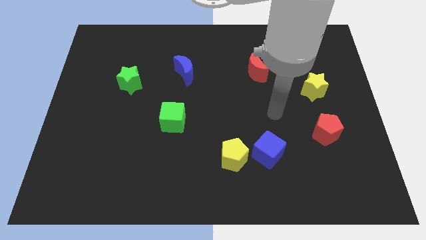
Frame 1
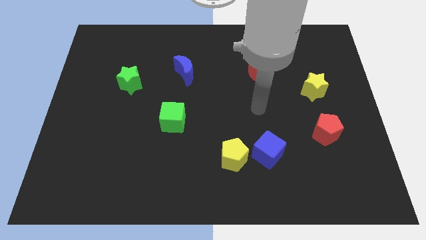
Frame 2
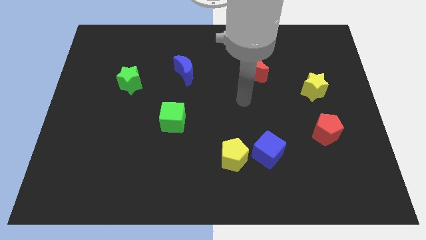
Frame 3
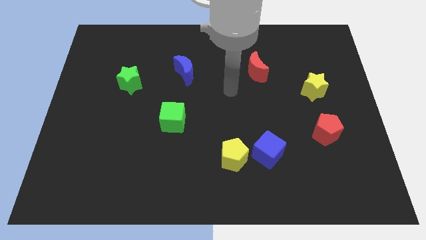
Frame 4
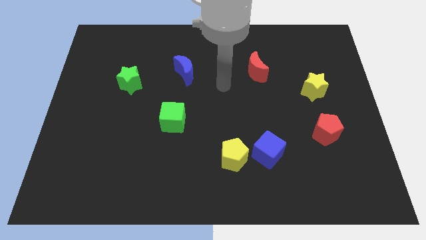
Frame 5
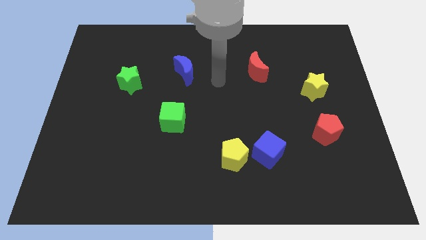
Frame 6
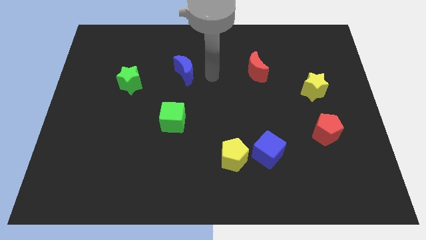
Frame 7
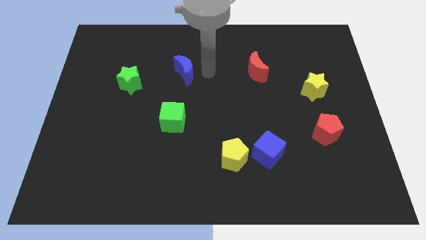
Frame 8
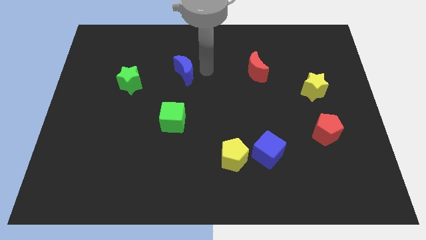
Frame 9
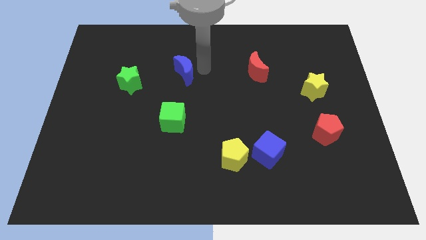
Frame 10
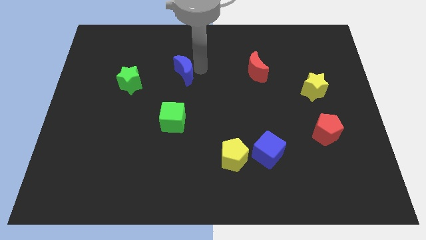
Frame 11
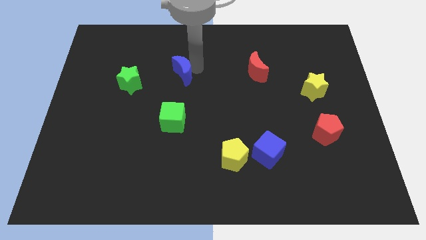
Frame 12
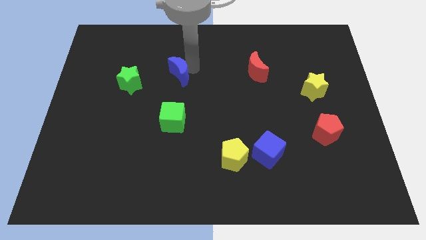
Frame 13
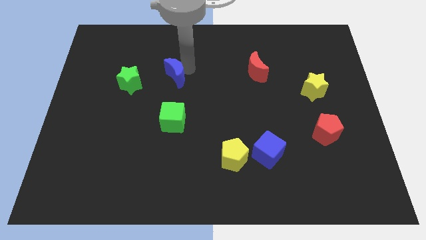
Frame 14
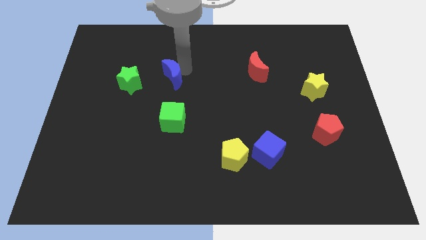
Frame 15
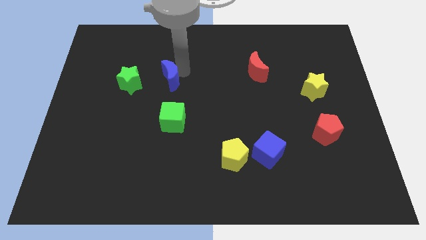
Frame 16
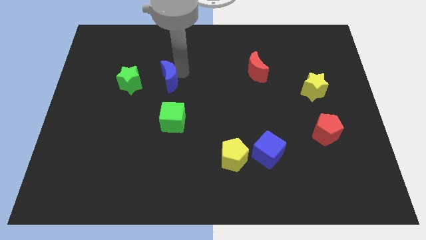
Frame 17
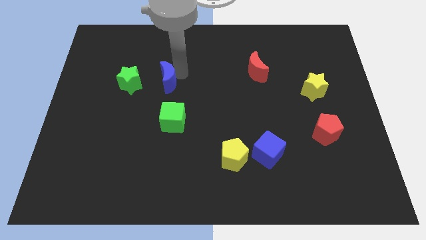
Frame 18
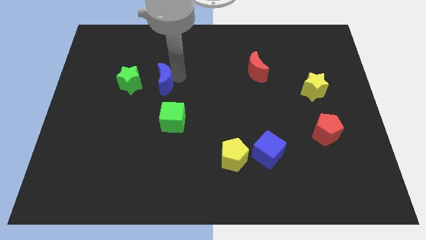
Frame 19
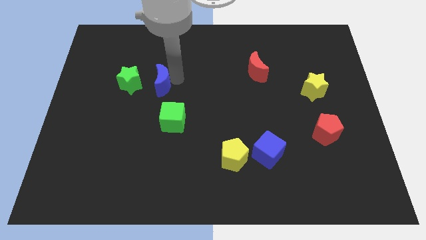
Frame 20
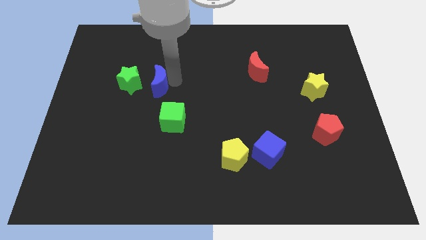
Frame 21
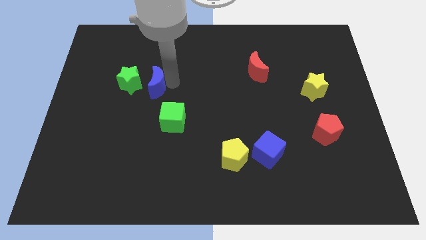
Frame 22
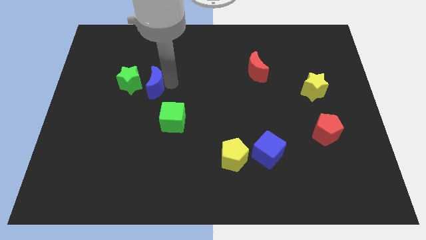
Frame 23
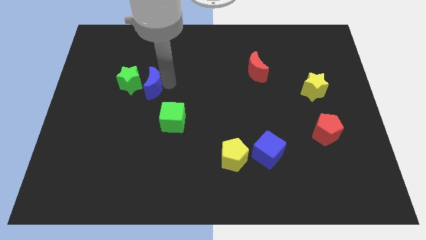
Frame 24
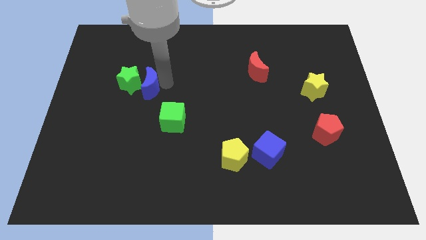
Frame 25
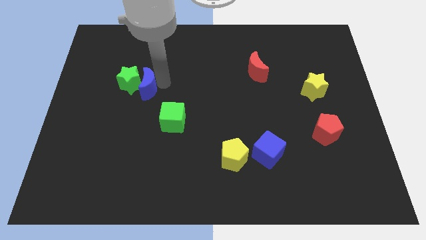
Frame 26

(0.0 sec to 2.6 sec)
push the blue moon close to the green star

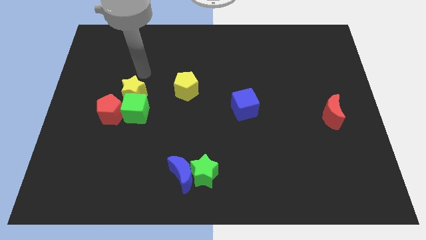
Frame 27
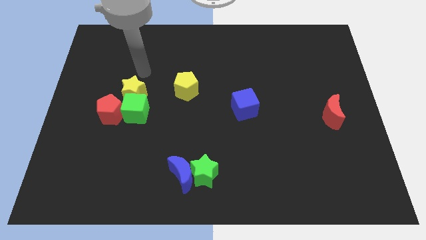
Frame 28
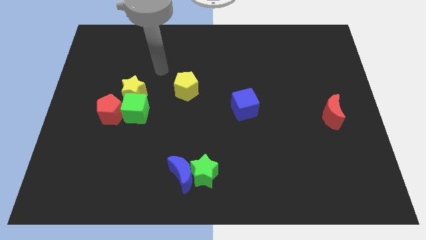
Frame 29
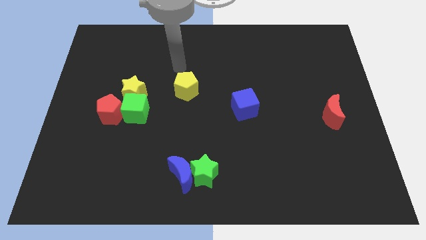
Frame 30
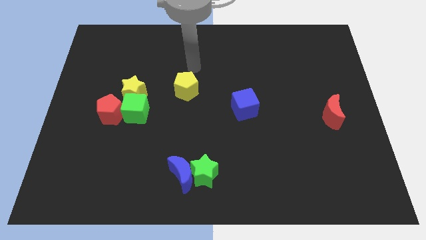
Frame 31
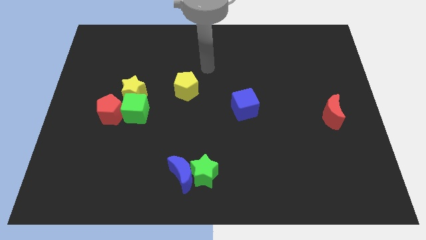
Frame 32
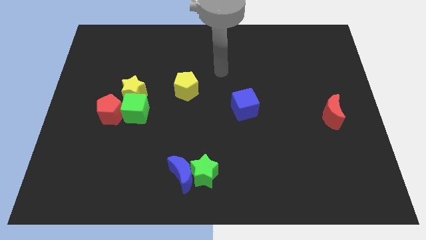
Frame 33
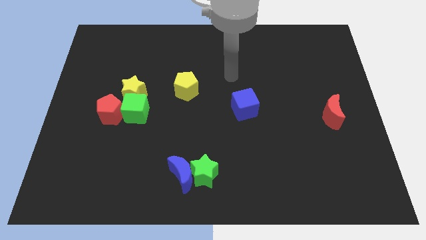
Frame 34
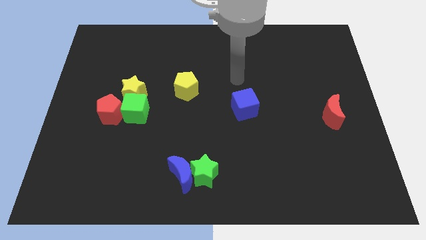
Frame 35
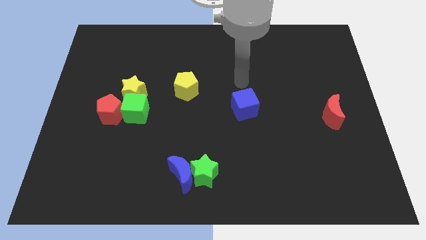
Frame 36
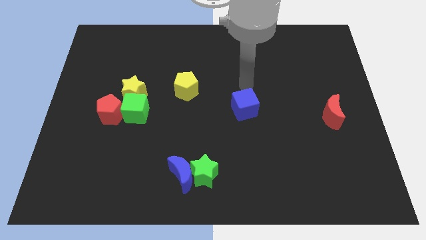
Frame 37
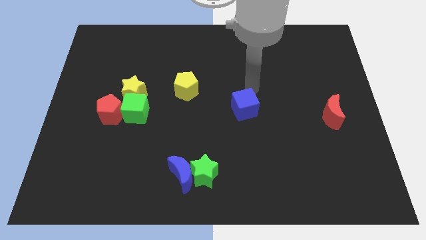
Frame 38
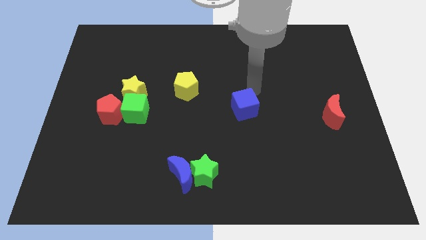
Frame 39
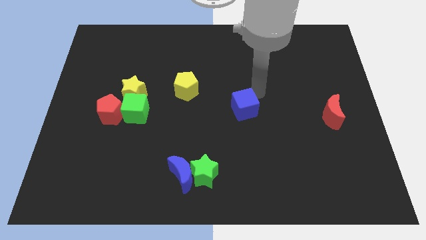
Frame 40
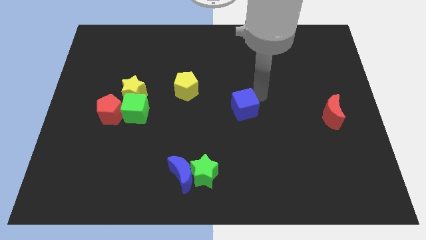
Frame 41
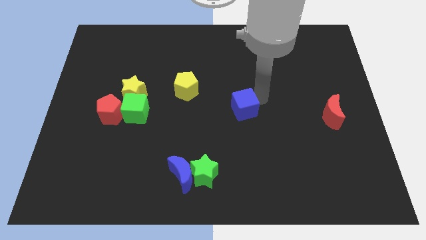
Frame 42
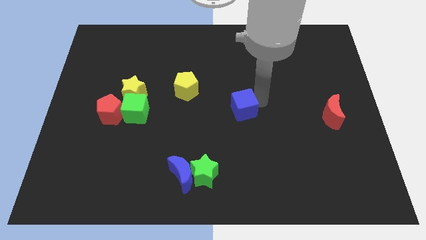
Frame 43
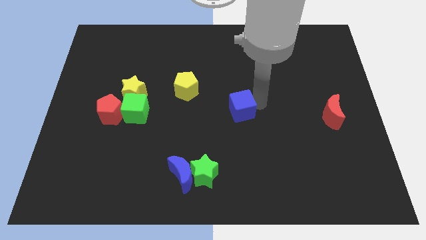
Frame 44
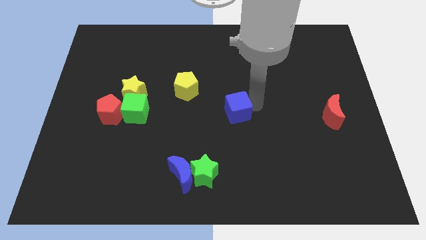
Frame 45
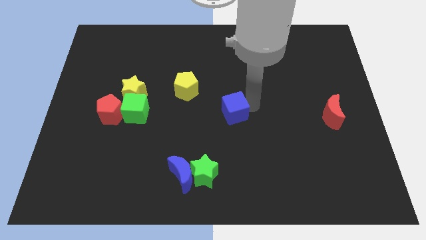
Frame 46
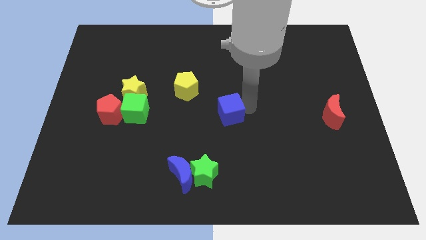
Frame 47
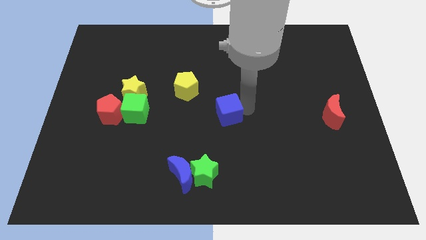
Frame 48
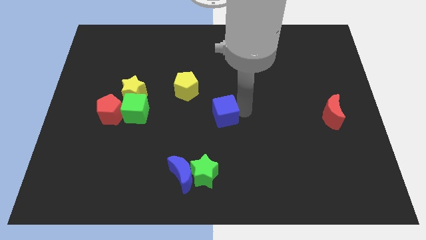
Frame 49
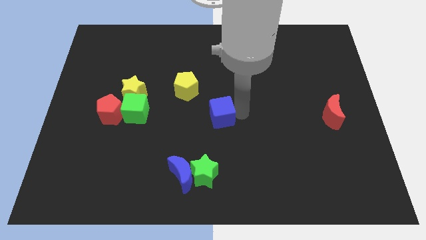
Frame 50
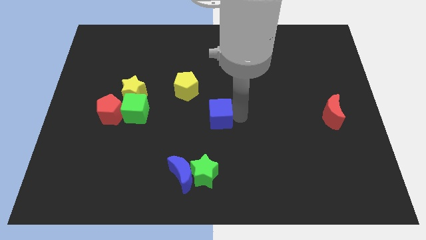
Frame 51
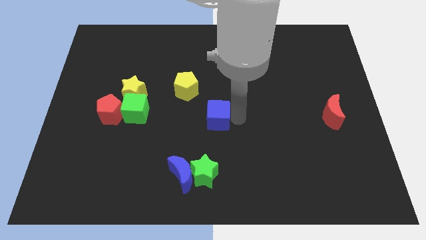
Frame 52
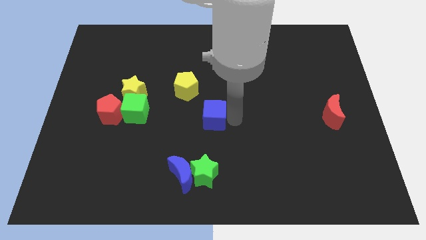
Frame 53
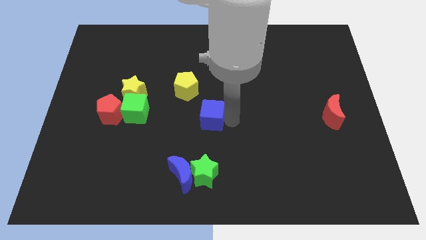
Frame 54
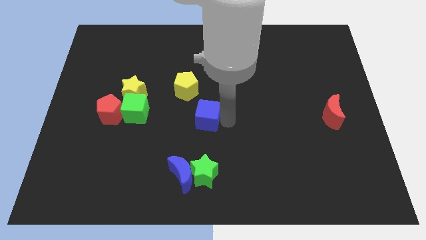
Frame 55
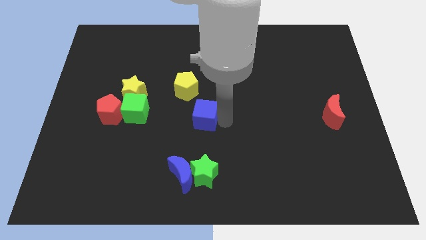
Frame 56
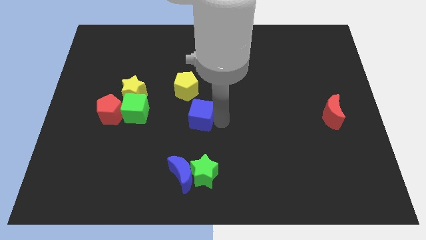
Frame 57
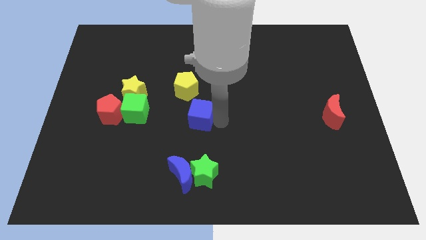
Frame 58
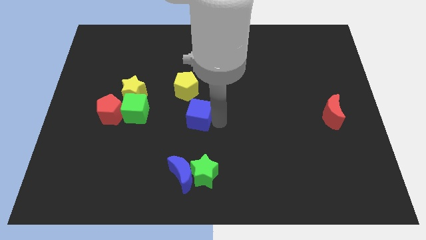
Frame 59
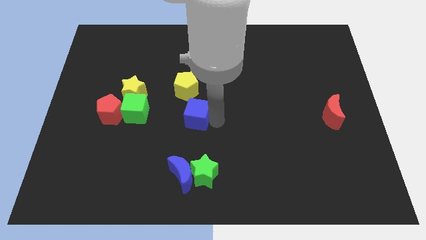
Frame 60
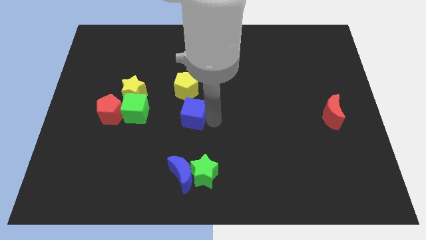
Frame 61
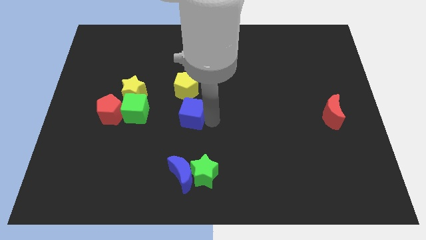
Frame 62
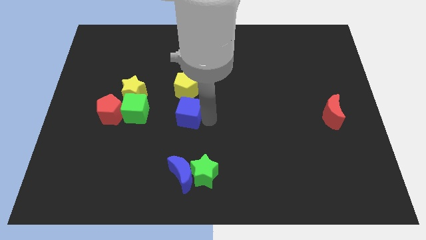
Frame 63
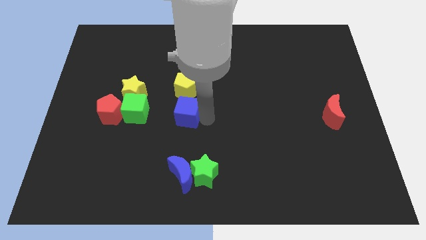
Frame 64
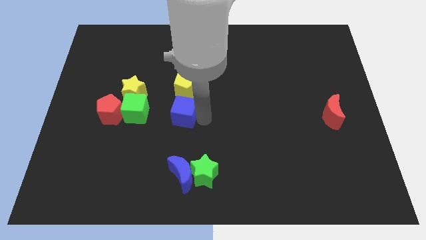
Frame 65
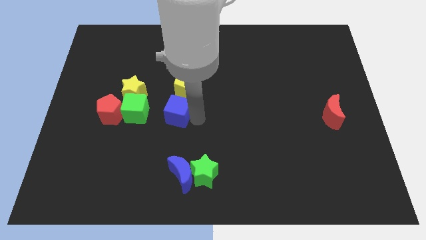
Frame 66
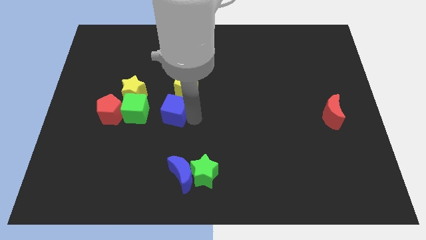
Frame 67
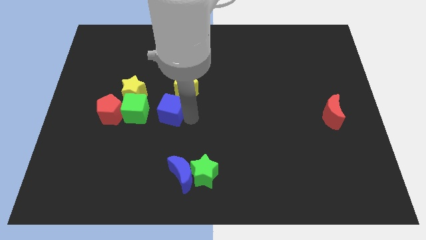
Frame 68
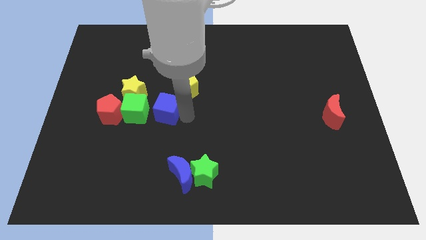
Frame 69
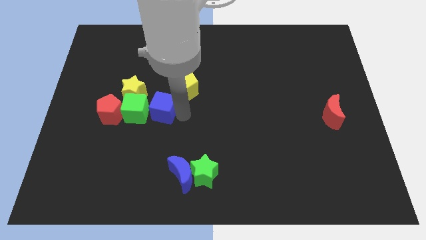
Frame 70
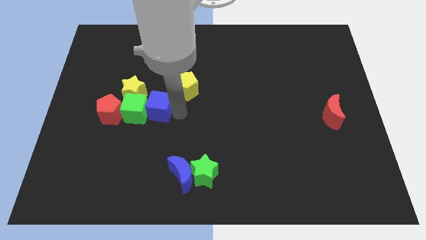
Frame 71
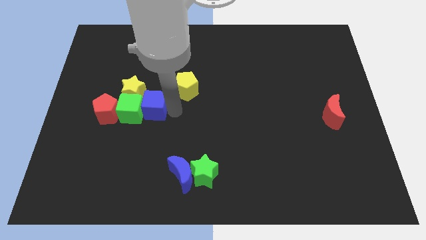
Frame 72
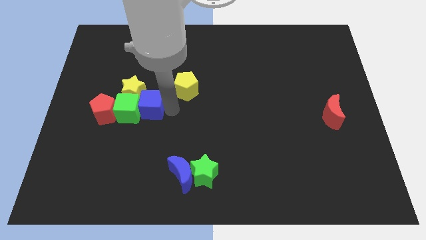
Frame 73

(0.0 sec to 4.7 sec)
slide the blue cube close to the green cube

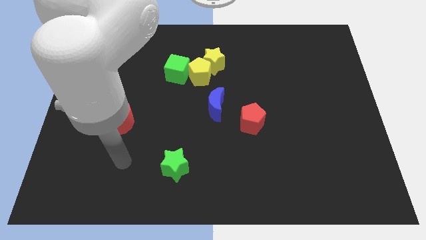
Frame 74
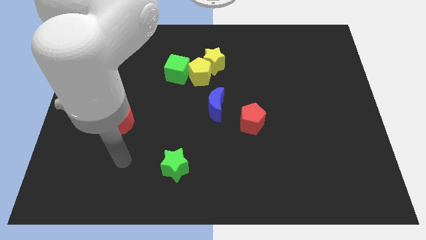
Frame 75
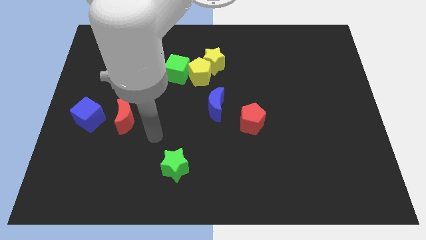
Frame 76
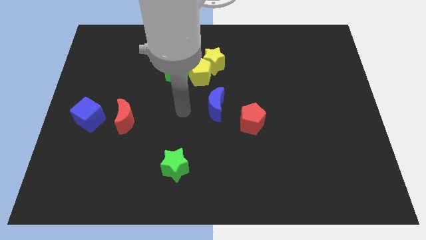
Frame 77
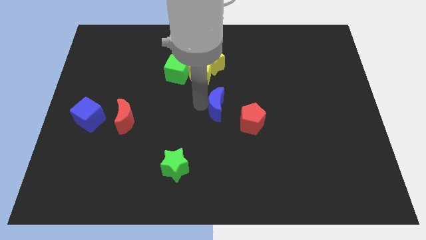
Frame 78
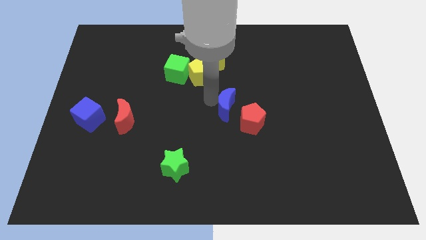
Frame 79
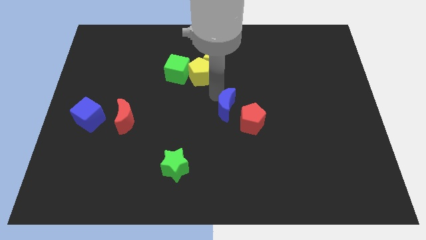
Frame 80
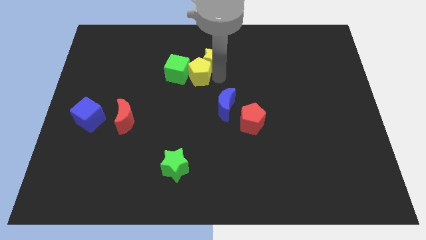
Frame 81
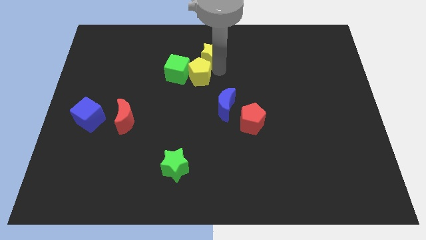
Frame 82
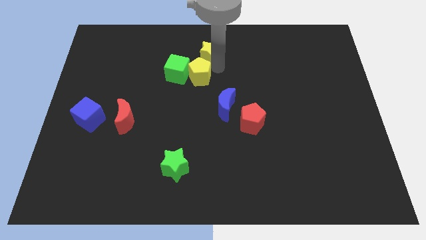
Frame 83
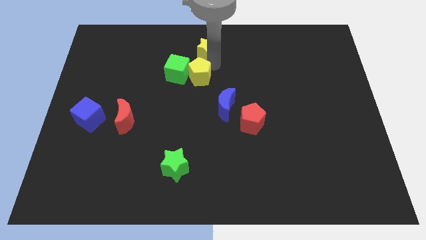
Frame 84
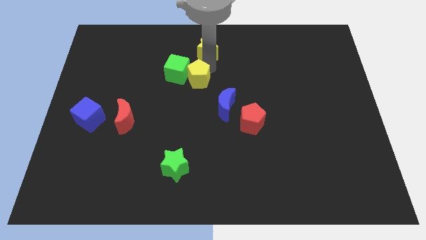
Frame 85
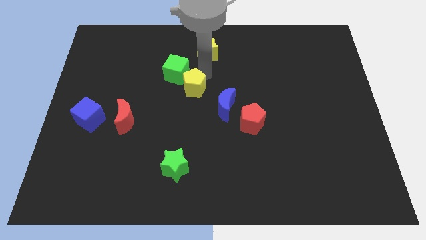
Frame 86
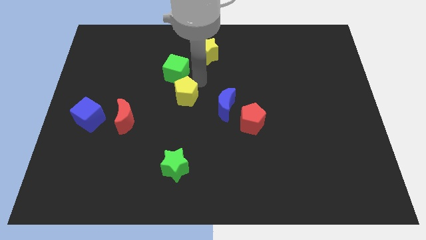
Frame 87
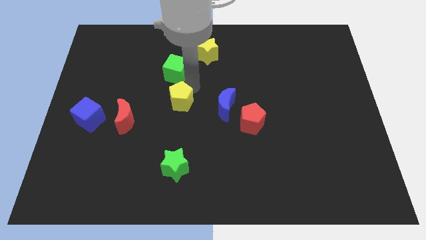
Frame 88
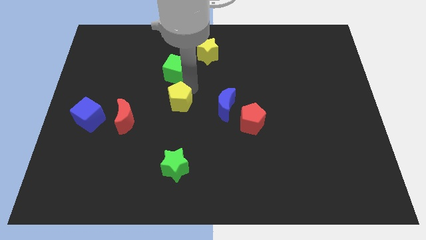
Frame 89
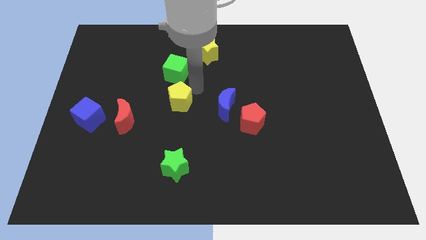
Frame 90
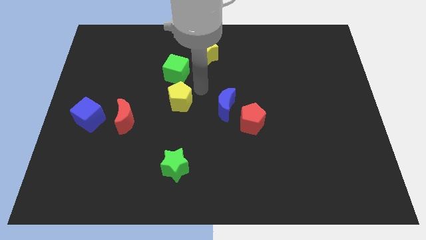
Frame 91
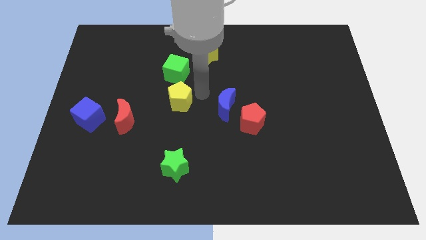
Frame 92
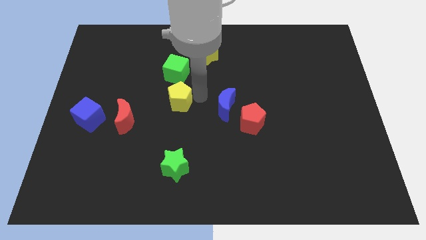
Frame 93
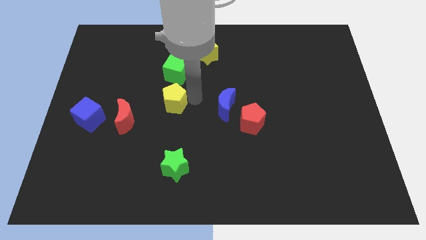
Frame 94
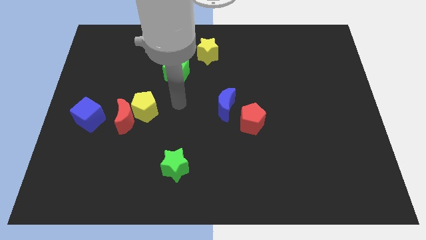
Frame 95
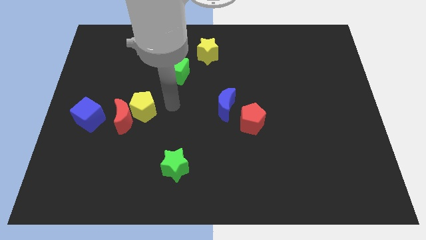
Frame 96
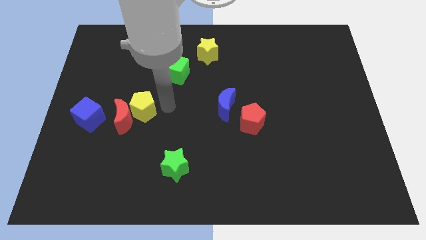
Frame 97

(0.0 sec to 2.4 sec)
slide the yellow pentagon next to the red moon
